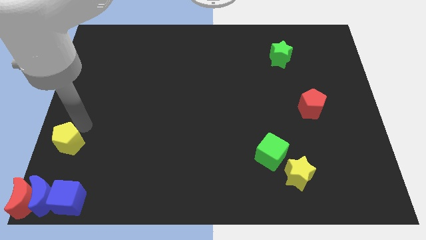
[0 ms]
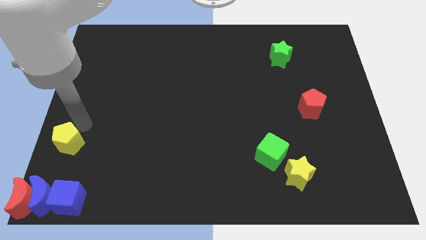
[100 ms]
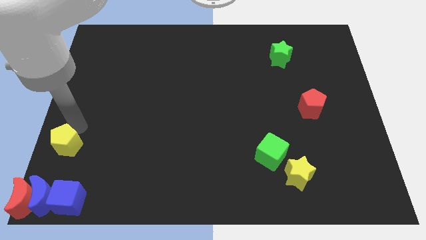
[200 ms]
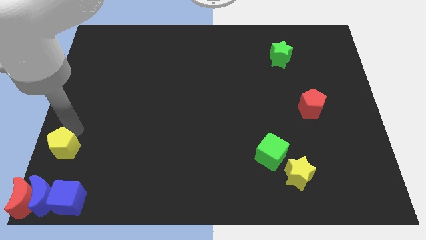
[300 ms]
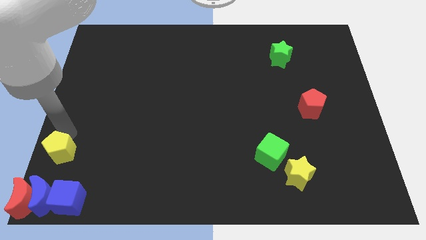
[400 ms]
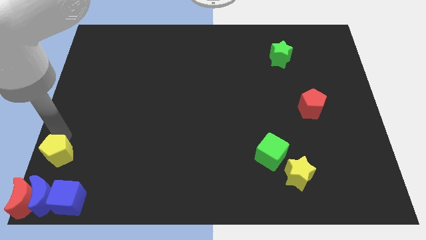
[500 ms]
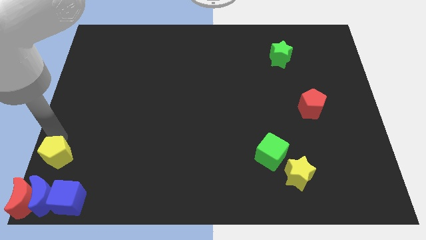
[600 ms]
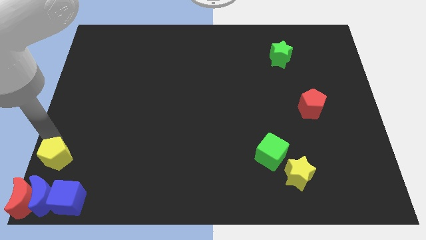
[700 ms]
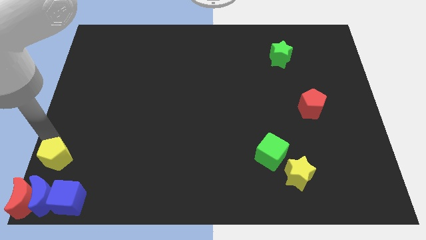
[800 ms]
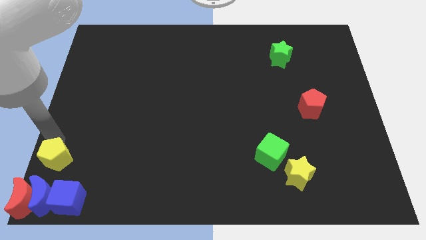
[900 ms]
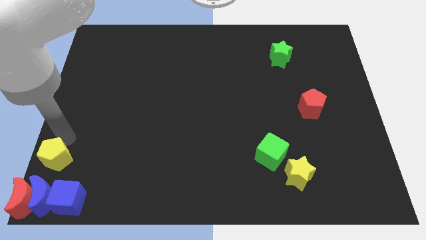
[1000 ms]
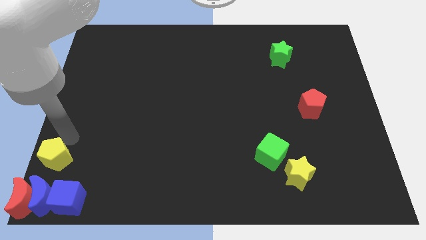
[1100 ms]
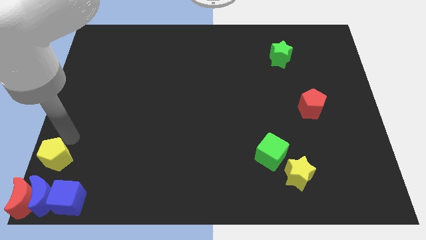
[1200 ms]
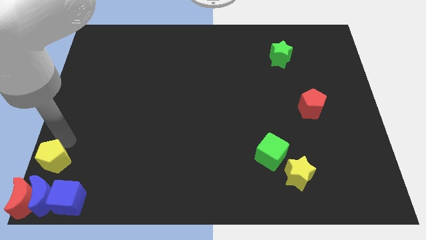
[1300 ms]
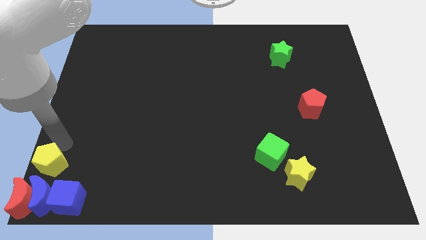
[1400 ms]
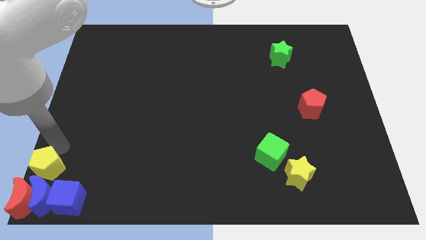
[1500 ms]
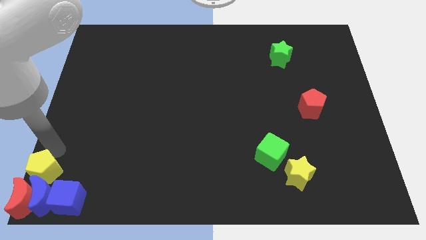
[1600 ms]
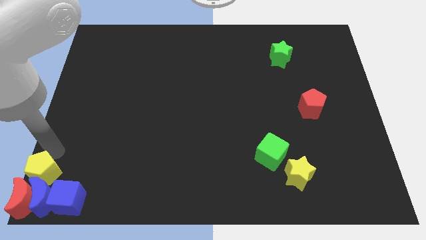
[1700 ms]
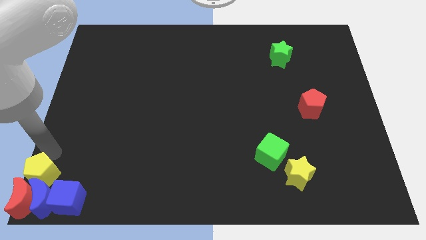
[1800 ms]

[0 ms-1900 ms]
put the yellow pentagon above the red and blue moons

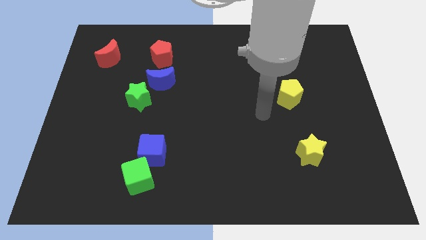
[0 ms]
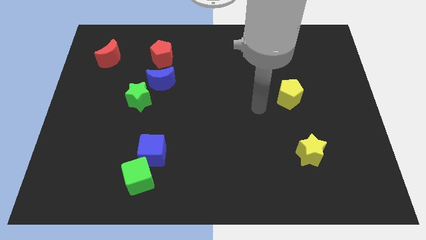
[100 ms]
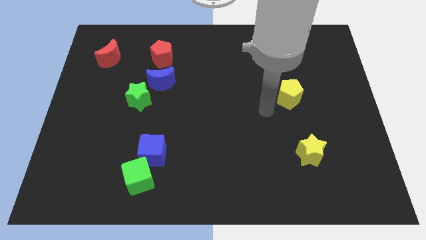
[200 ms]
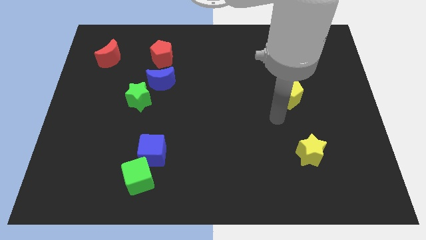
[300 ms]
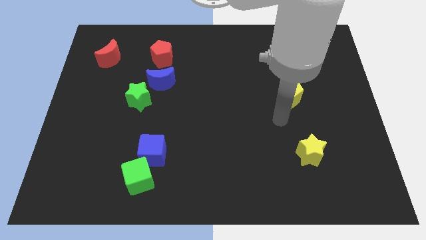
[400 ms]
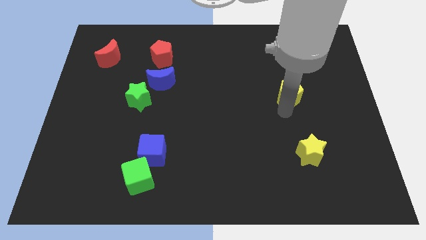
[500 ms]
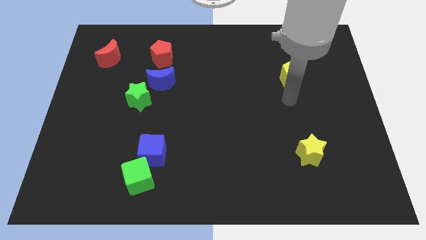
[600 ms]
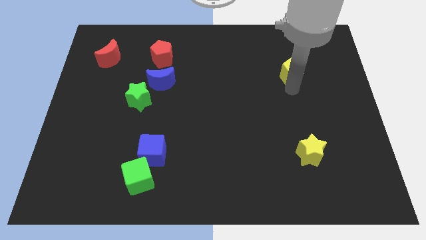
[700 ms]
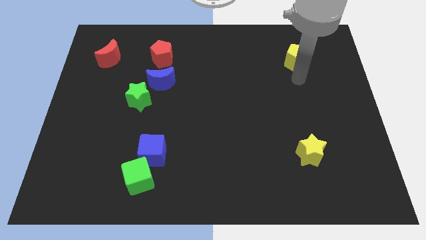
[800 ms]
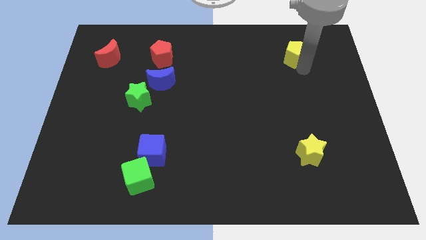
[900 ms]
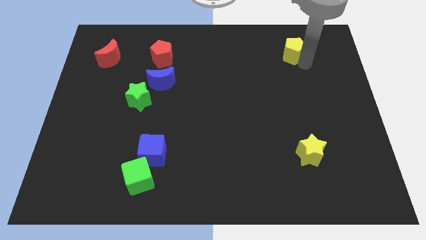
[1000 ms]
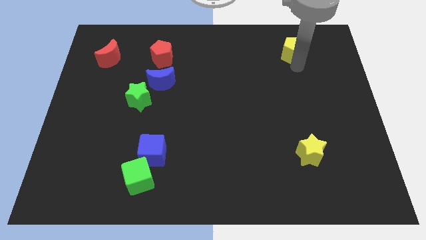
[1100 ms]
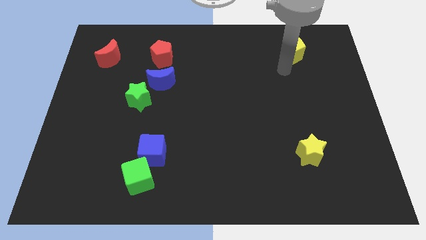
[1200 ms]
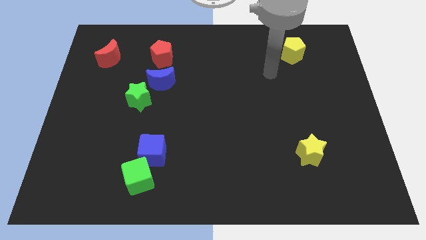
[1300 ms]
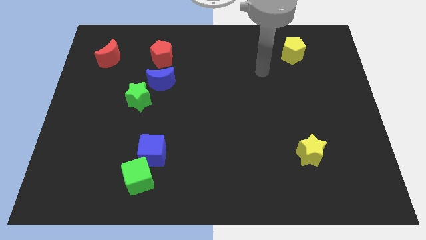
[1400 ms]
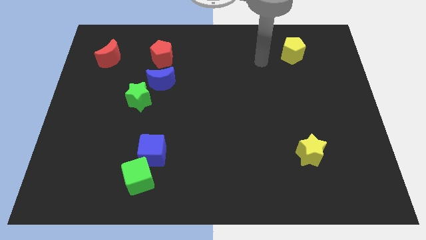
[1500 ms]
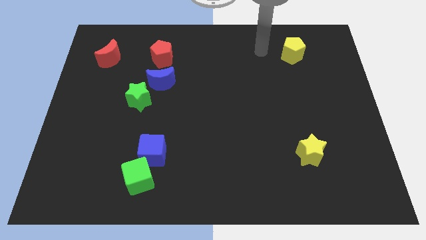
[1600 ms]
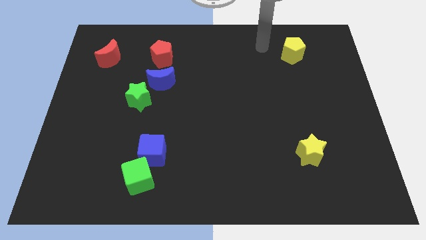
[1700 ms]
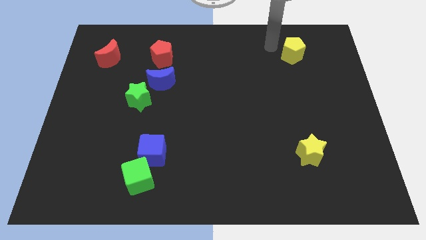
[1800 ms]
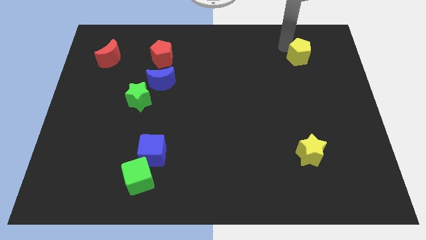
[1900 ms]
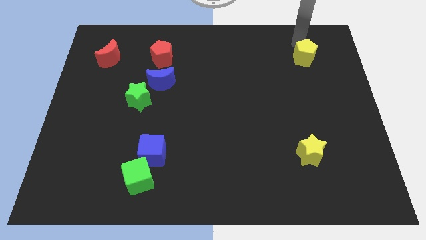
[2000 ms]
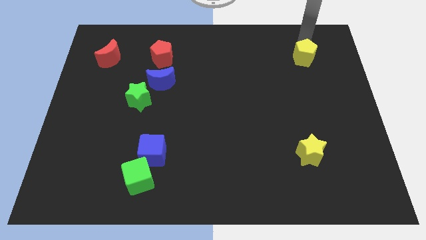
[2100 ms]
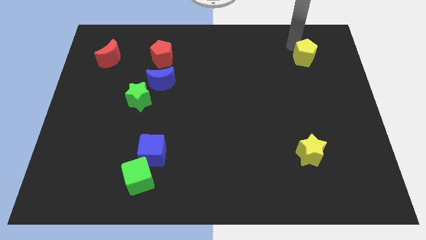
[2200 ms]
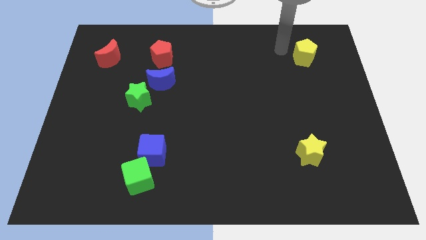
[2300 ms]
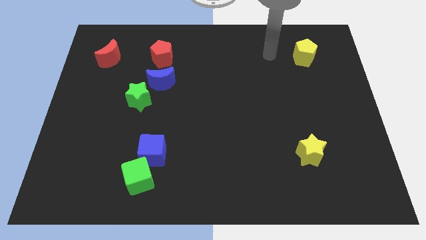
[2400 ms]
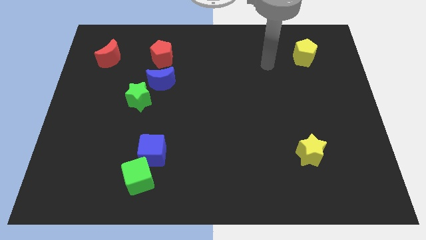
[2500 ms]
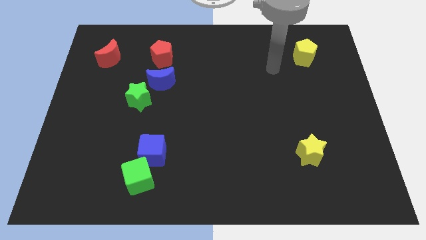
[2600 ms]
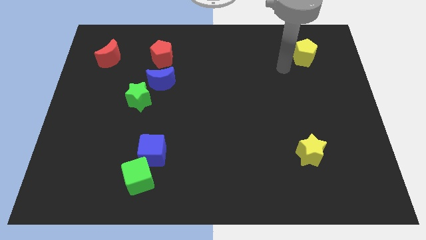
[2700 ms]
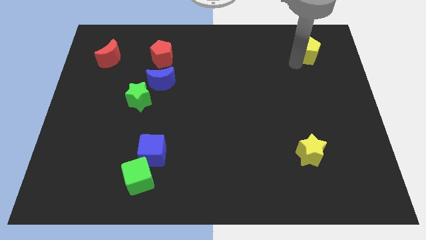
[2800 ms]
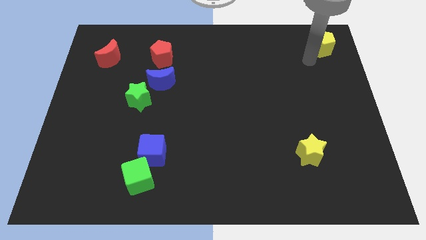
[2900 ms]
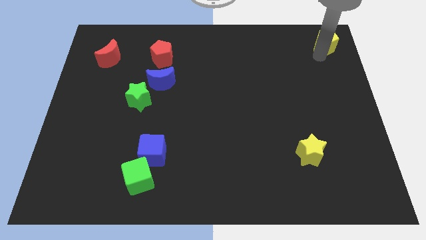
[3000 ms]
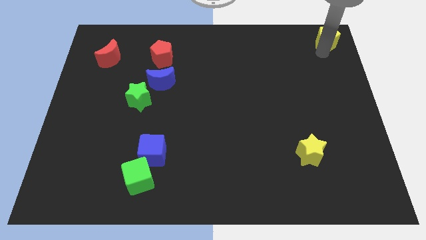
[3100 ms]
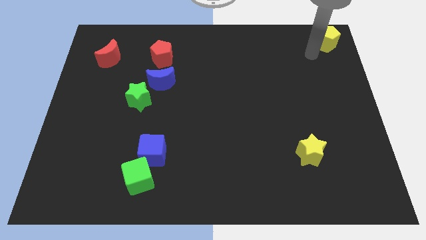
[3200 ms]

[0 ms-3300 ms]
push the yellow pentagon away from the vertical top of yellow star

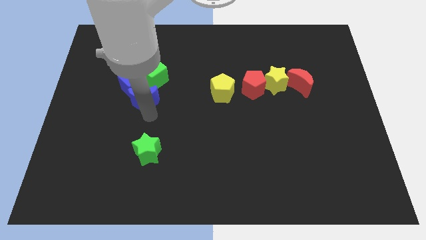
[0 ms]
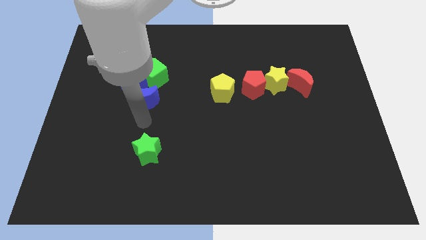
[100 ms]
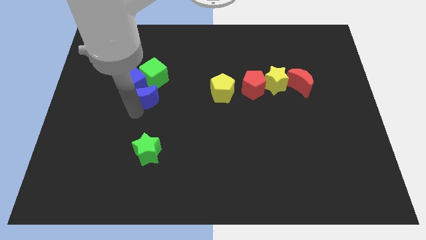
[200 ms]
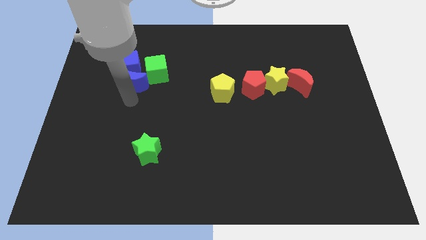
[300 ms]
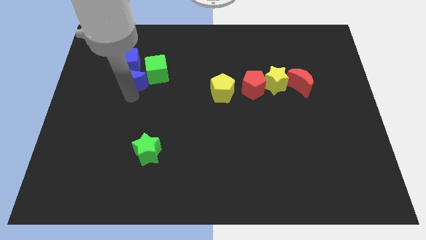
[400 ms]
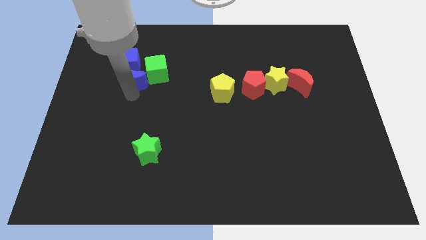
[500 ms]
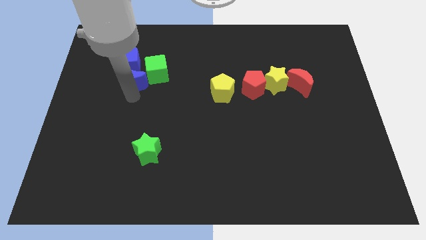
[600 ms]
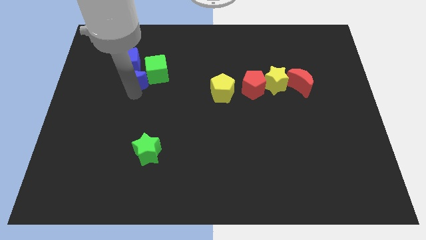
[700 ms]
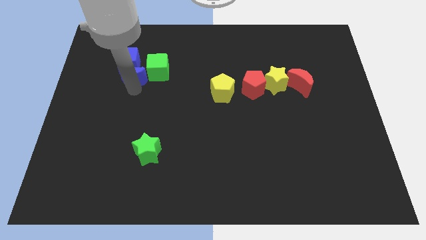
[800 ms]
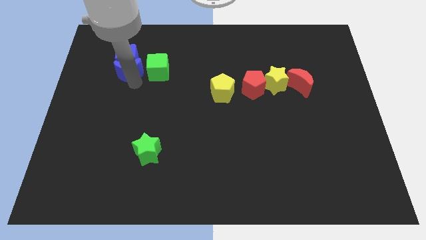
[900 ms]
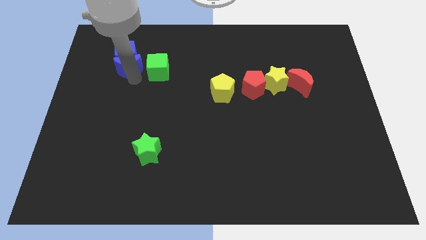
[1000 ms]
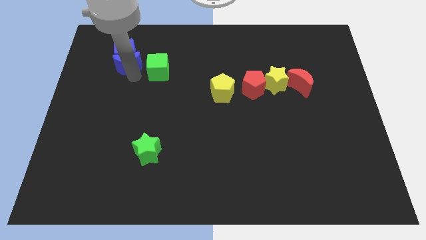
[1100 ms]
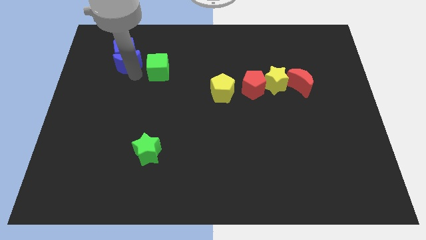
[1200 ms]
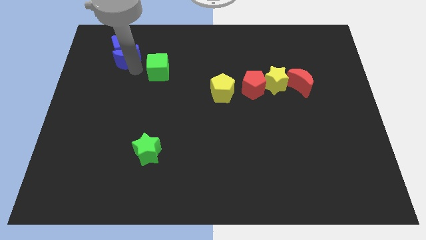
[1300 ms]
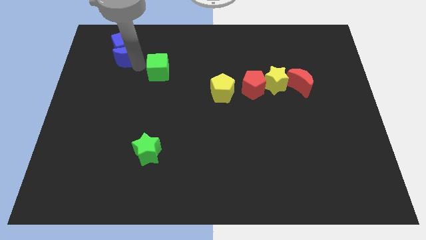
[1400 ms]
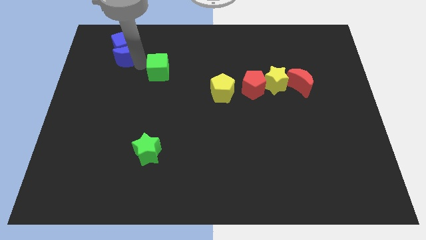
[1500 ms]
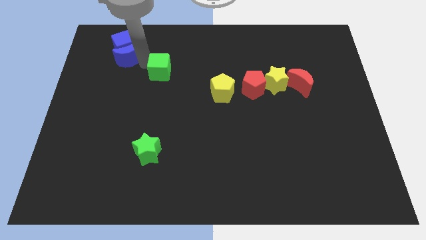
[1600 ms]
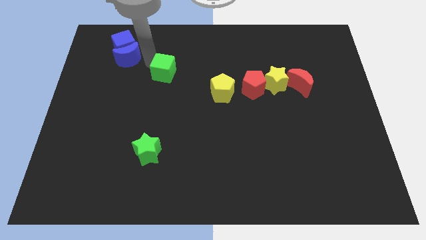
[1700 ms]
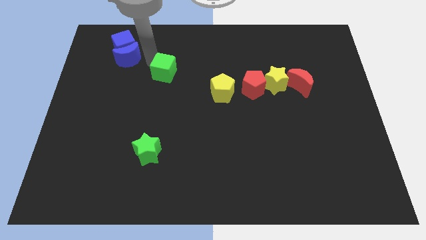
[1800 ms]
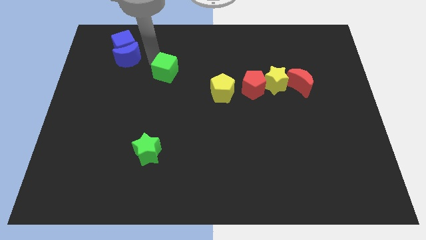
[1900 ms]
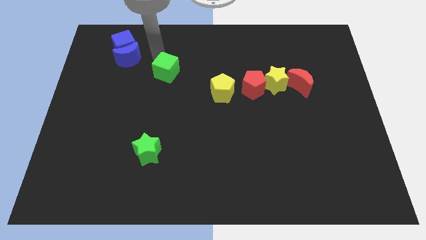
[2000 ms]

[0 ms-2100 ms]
separate blue blocks and green cube

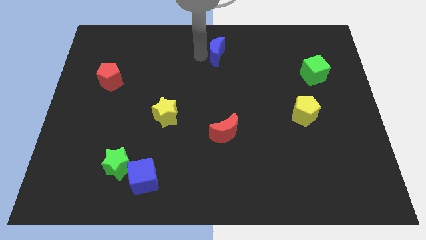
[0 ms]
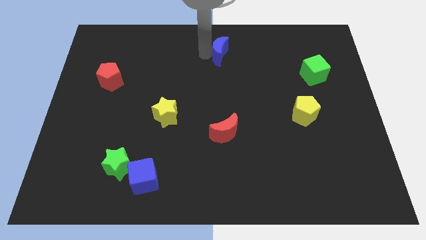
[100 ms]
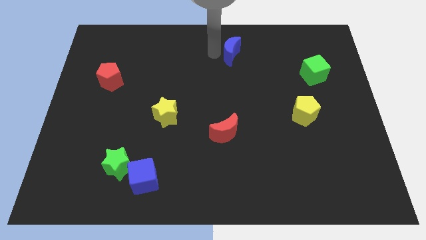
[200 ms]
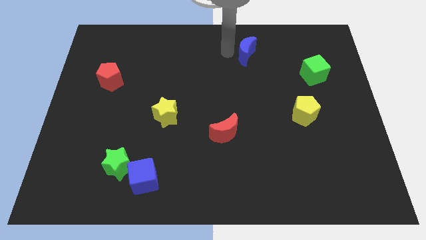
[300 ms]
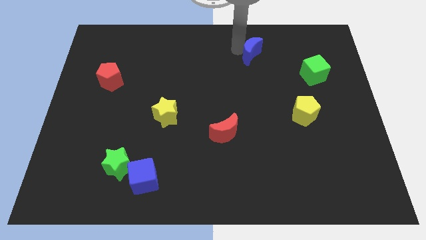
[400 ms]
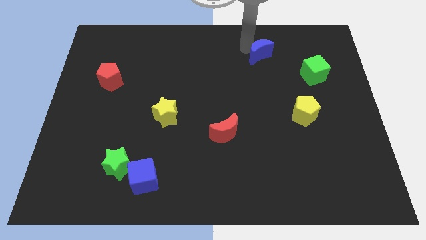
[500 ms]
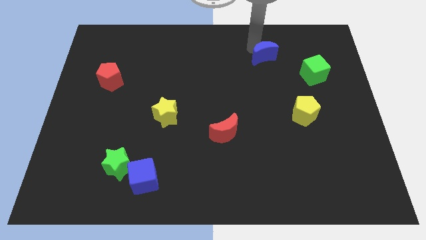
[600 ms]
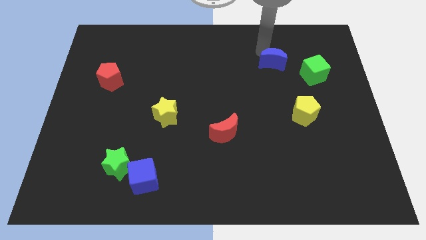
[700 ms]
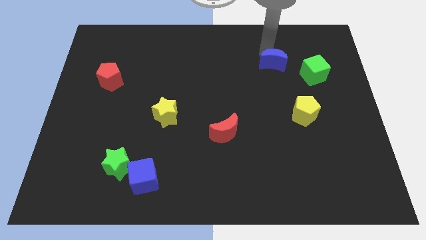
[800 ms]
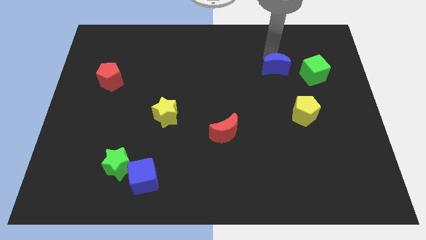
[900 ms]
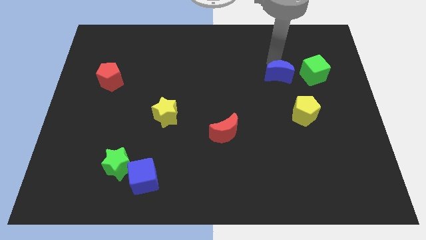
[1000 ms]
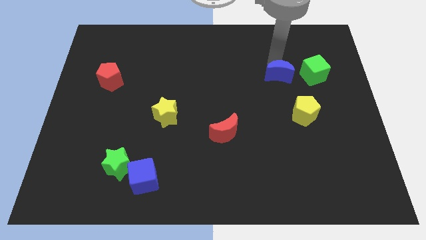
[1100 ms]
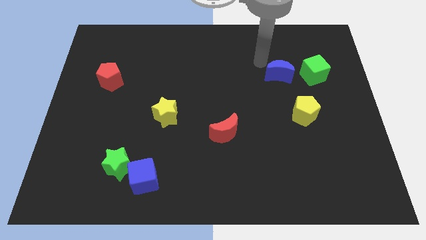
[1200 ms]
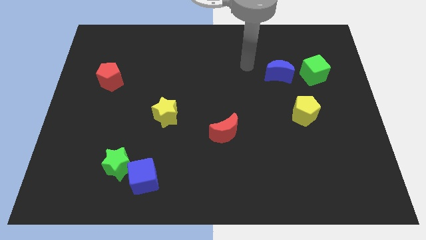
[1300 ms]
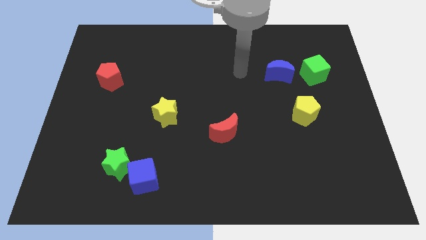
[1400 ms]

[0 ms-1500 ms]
place the blue moon left beside the green cube
